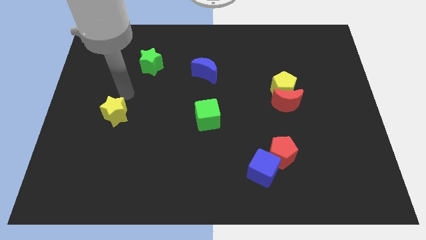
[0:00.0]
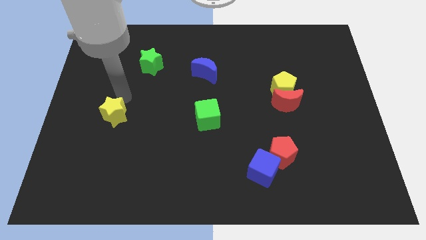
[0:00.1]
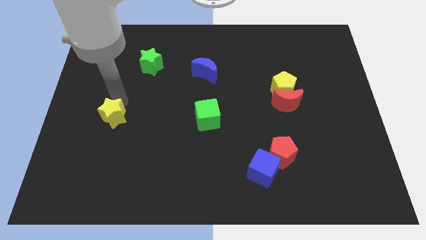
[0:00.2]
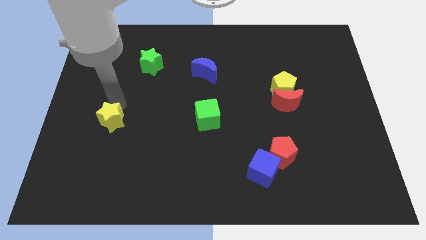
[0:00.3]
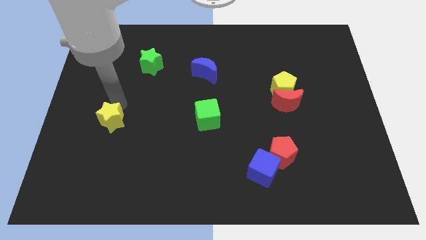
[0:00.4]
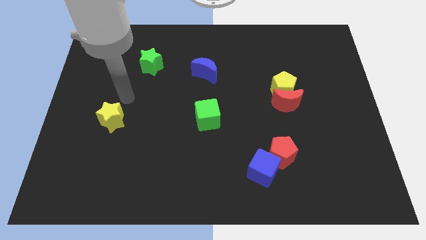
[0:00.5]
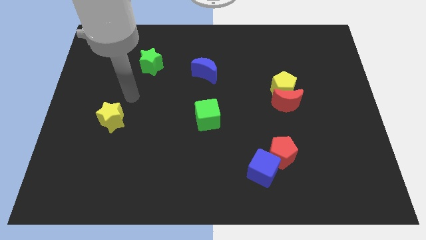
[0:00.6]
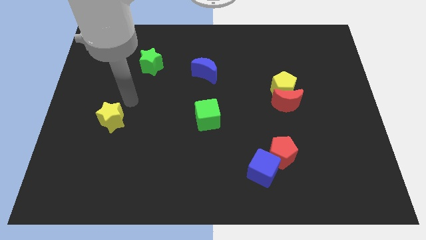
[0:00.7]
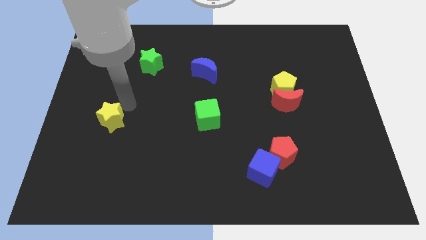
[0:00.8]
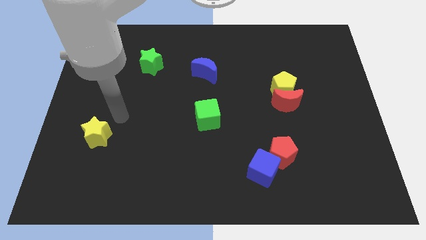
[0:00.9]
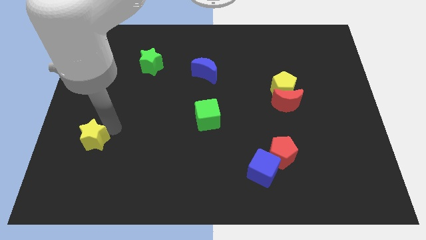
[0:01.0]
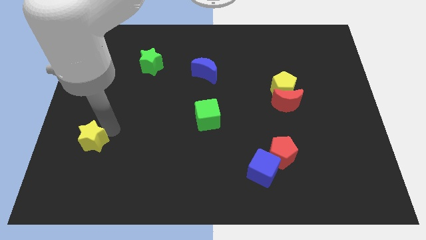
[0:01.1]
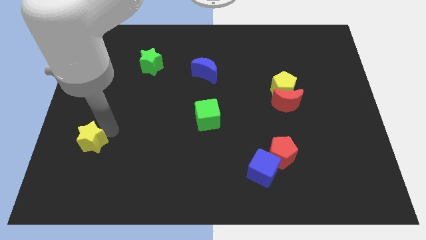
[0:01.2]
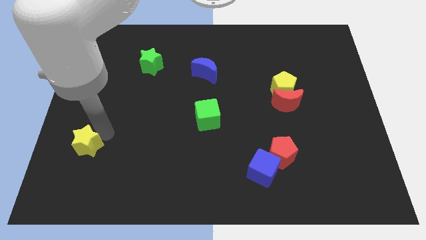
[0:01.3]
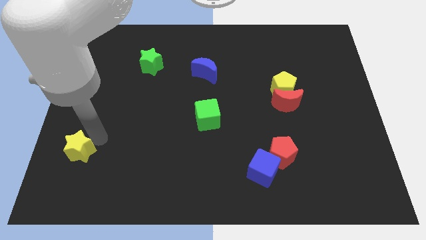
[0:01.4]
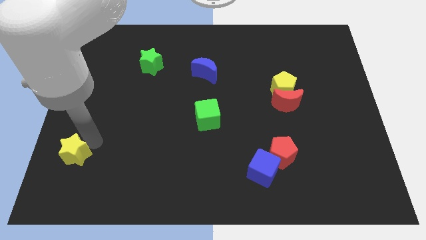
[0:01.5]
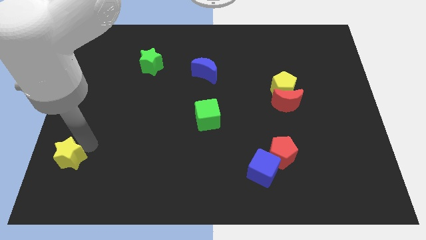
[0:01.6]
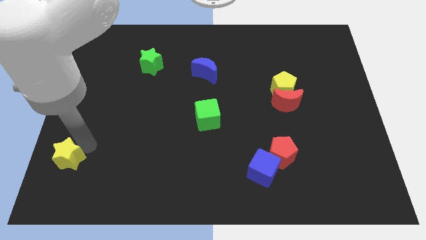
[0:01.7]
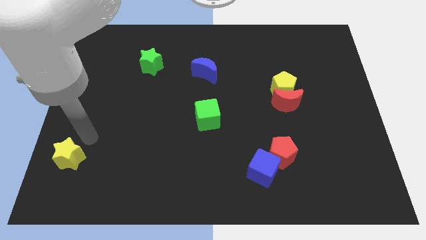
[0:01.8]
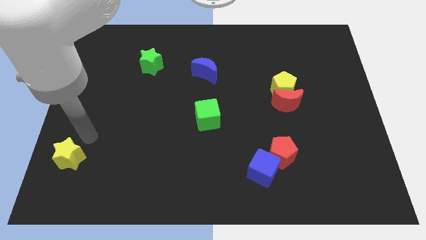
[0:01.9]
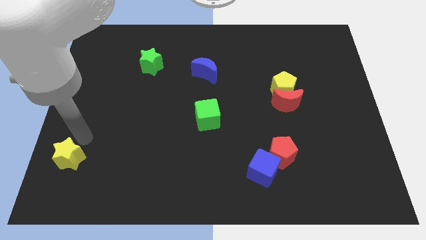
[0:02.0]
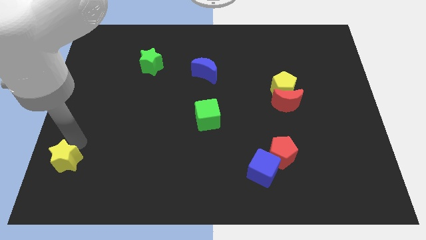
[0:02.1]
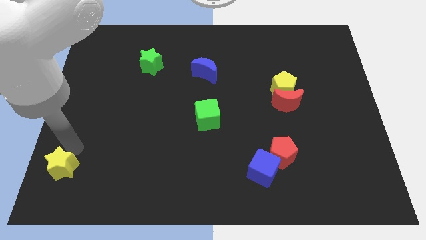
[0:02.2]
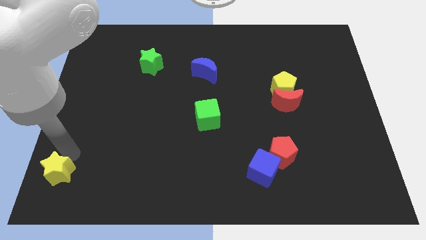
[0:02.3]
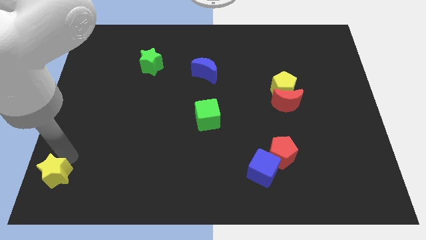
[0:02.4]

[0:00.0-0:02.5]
place the yellow star to the left of the blue cube

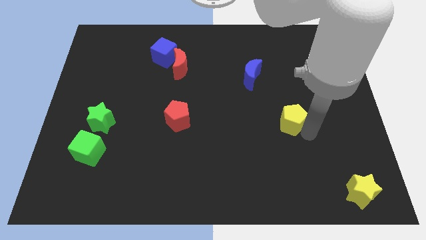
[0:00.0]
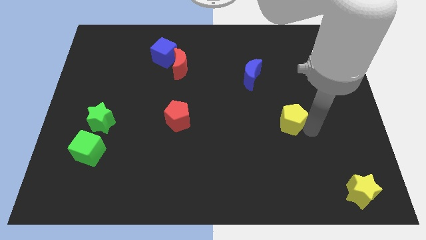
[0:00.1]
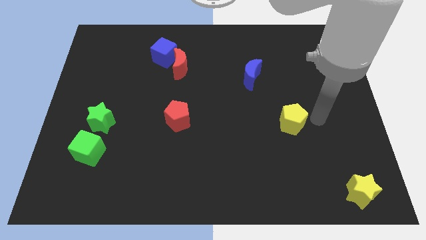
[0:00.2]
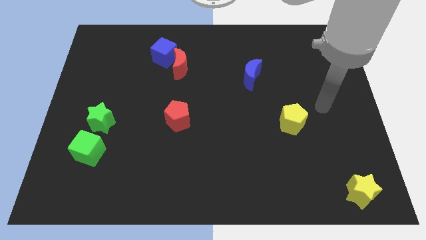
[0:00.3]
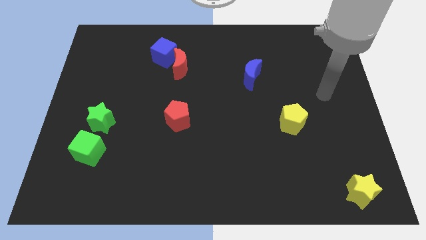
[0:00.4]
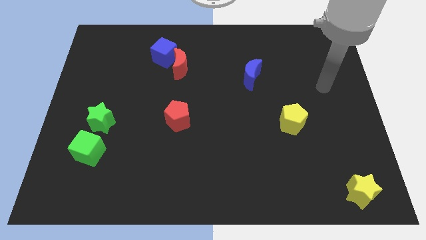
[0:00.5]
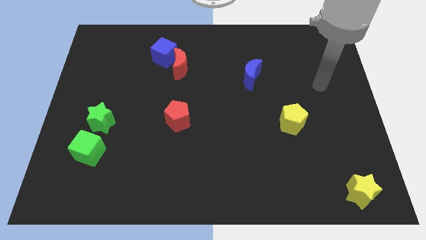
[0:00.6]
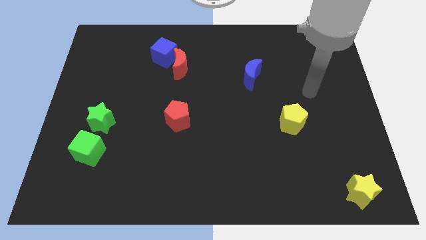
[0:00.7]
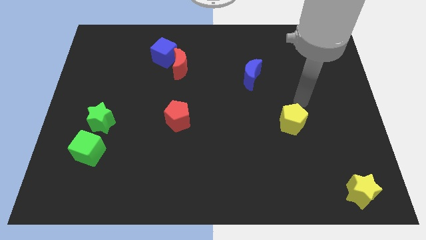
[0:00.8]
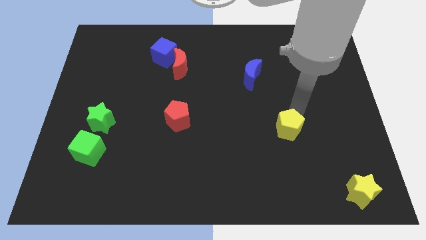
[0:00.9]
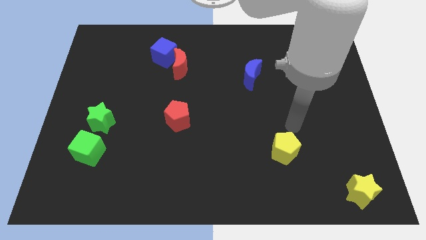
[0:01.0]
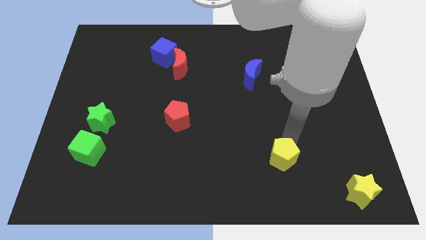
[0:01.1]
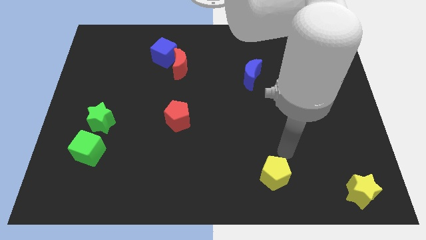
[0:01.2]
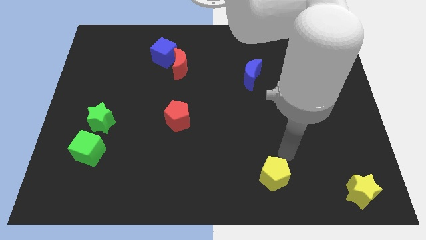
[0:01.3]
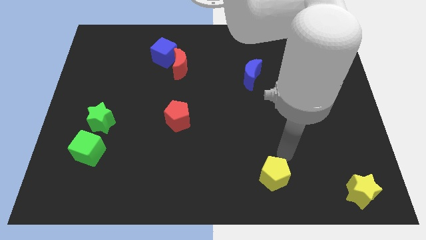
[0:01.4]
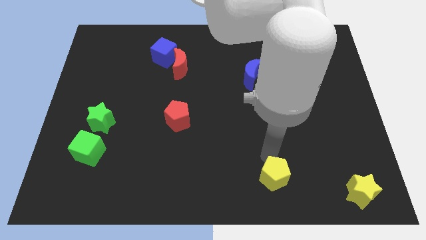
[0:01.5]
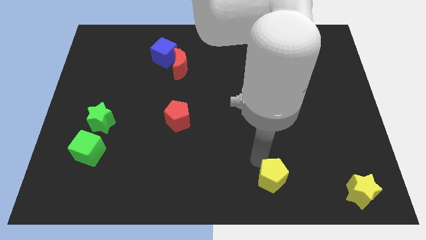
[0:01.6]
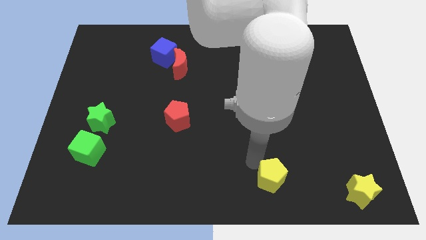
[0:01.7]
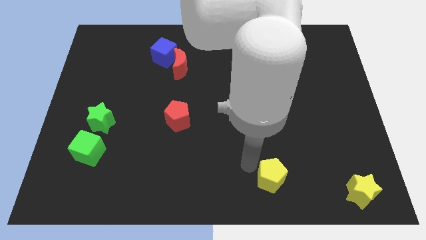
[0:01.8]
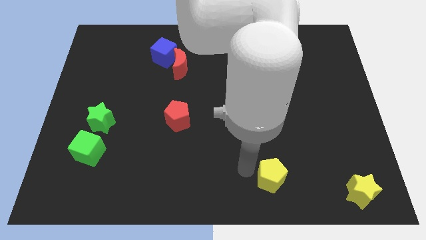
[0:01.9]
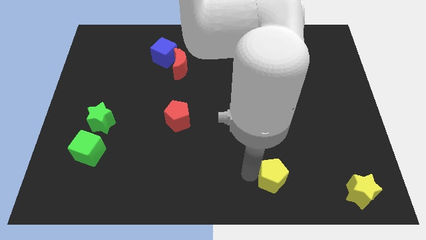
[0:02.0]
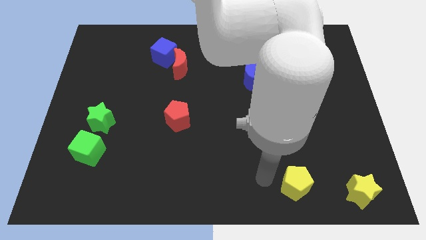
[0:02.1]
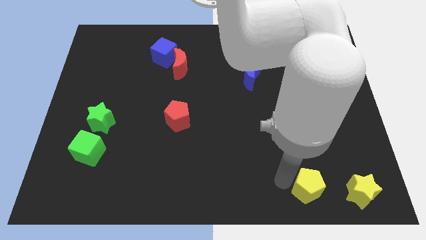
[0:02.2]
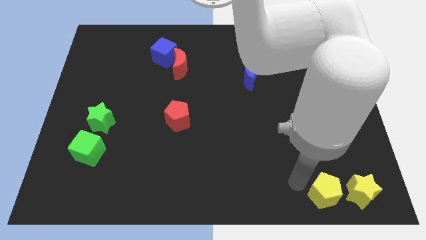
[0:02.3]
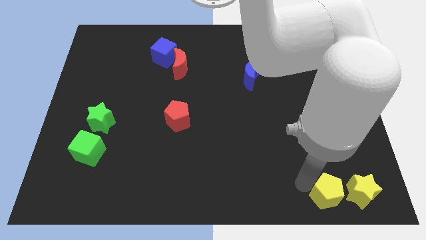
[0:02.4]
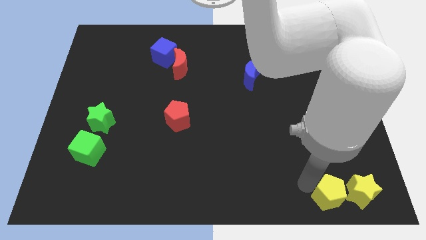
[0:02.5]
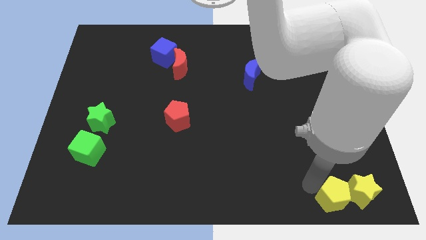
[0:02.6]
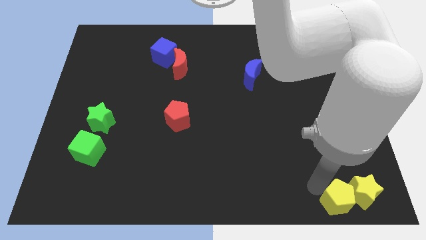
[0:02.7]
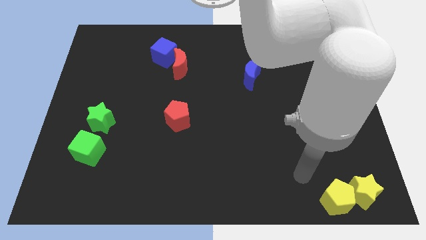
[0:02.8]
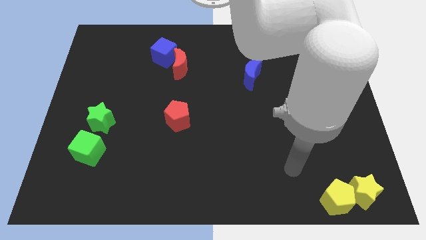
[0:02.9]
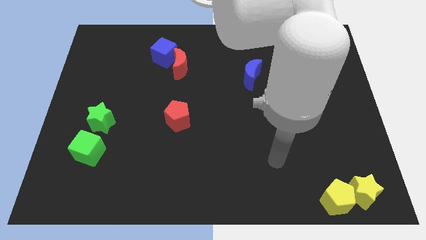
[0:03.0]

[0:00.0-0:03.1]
push the yellow pentagon into the yellow star

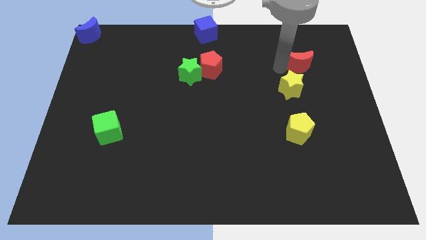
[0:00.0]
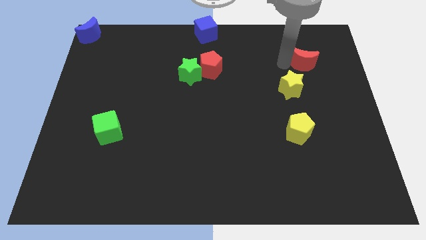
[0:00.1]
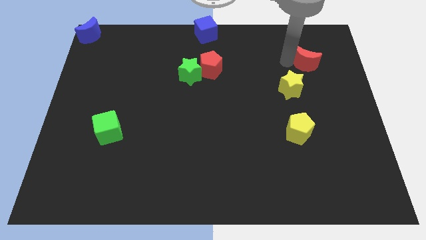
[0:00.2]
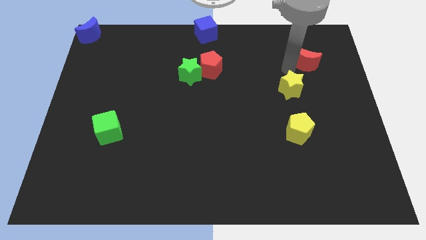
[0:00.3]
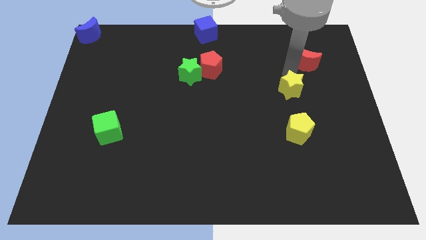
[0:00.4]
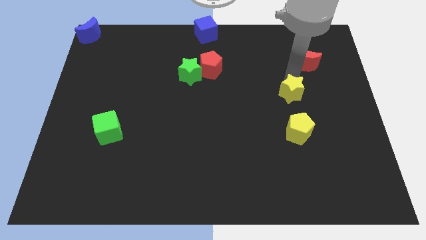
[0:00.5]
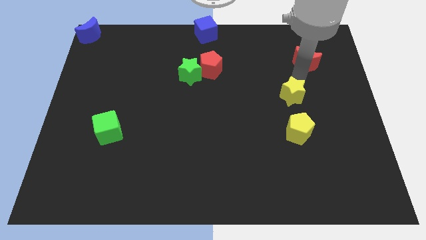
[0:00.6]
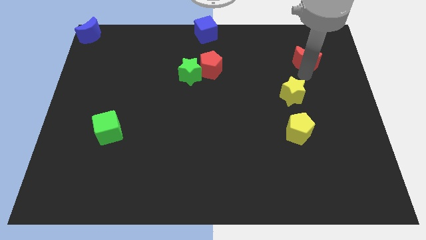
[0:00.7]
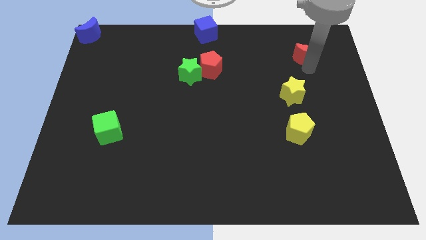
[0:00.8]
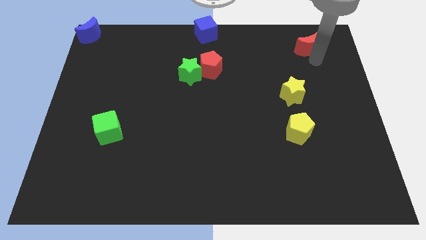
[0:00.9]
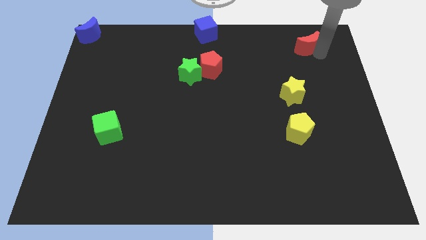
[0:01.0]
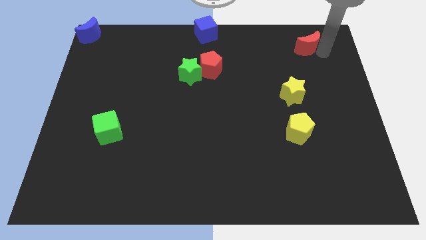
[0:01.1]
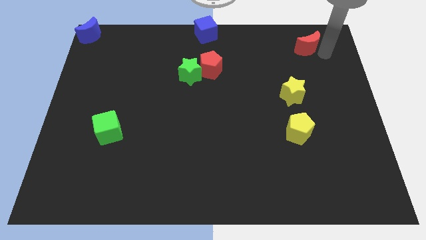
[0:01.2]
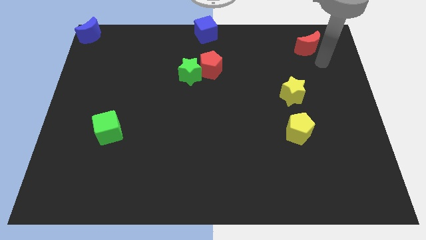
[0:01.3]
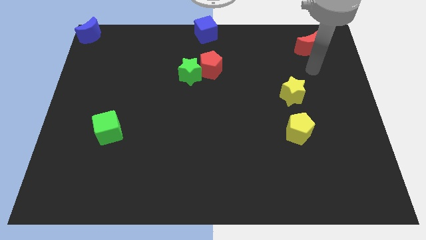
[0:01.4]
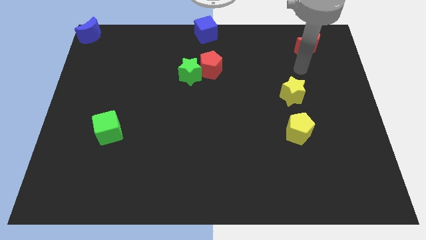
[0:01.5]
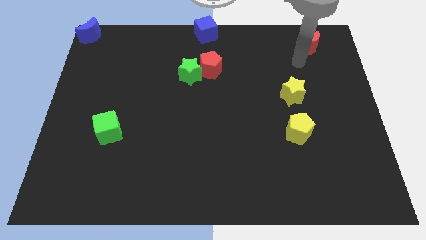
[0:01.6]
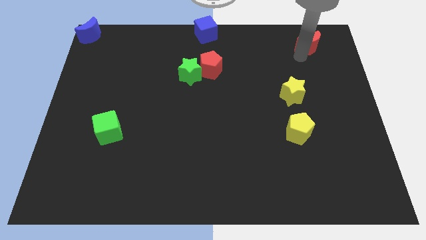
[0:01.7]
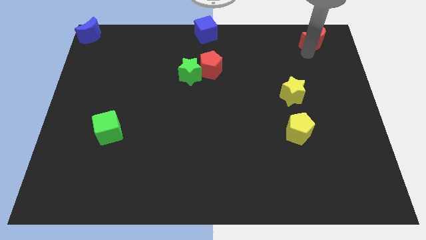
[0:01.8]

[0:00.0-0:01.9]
drag the red moon towards the top right

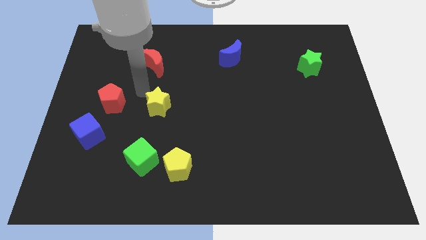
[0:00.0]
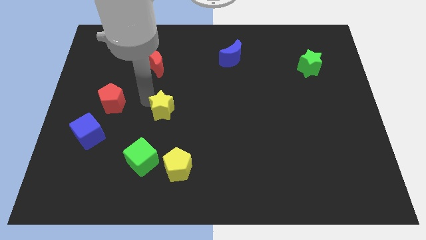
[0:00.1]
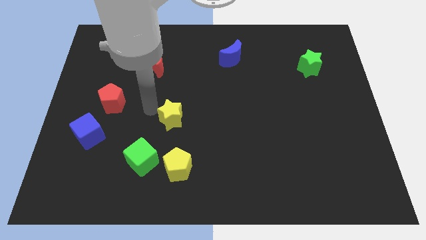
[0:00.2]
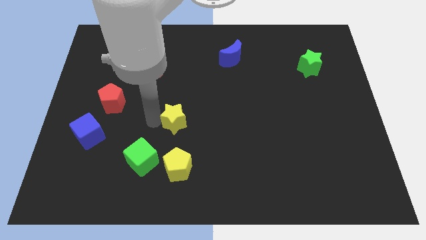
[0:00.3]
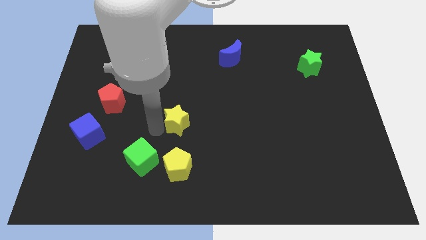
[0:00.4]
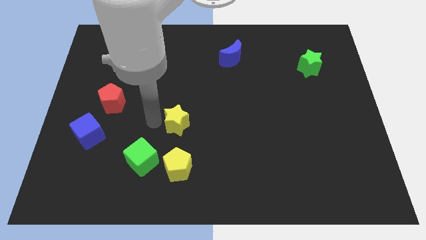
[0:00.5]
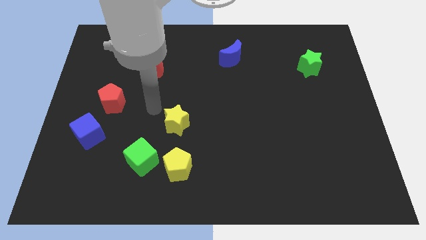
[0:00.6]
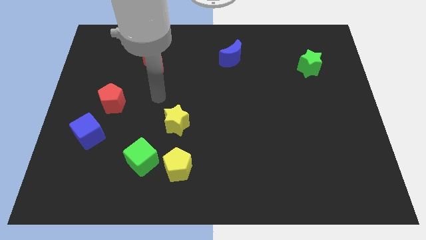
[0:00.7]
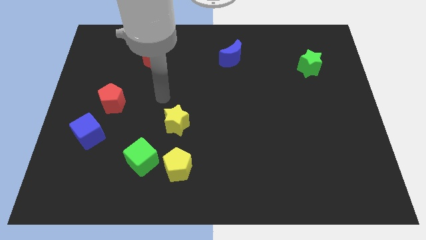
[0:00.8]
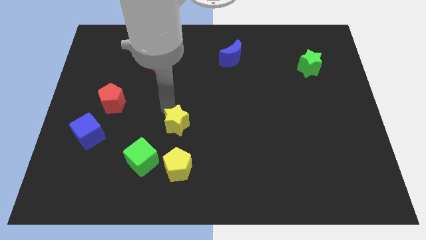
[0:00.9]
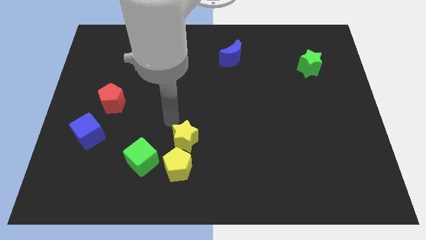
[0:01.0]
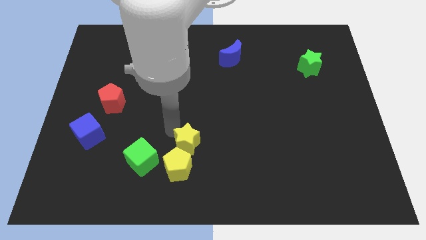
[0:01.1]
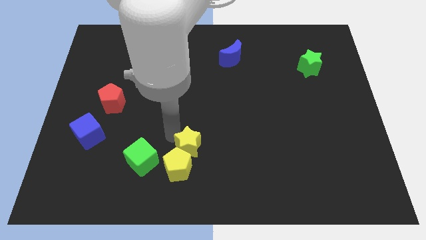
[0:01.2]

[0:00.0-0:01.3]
place yellow star on top of the yellow pentagon
